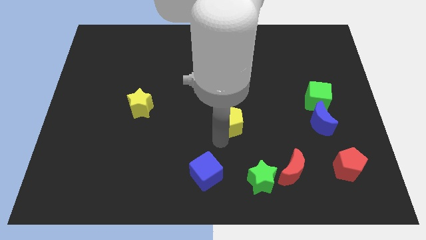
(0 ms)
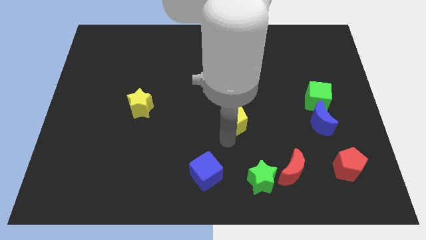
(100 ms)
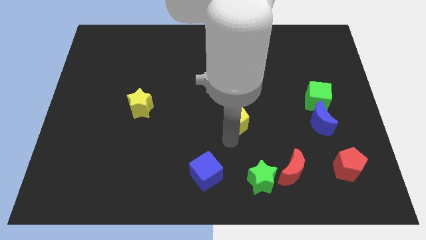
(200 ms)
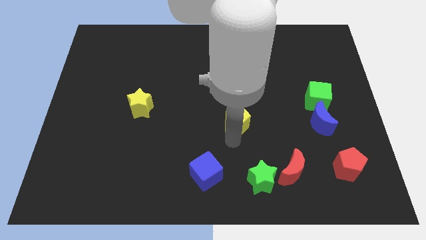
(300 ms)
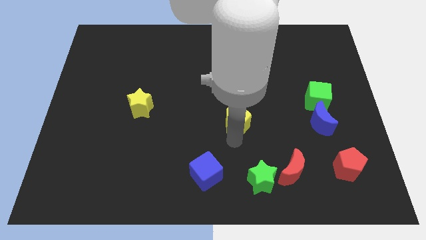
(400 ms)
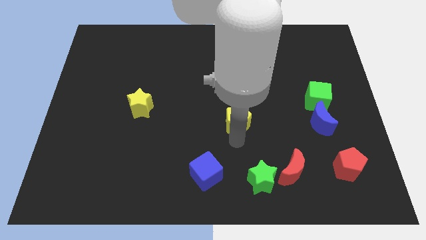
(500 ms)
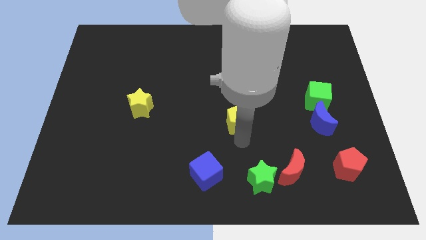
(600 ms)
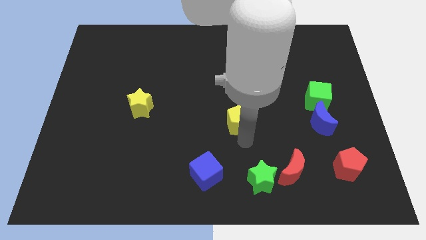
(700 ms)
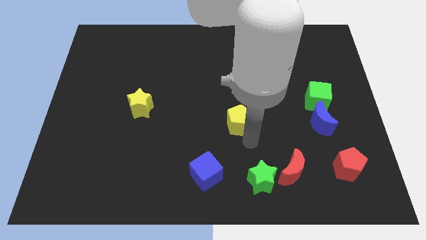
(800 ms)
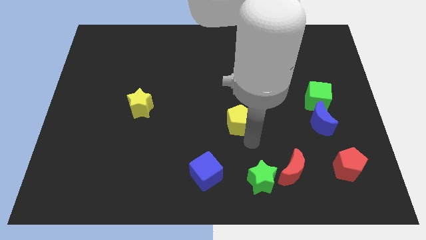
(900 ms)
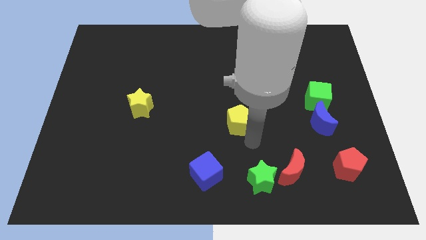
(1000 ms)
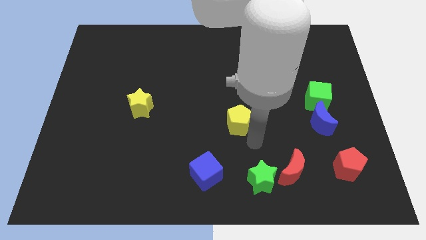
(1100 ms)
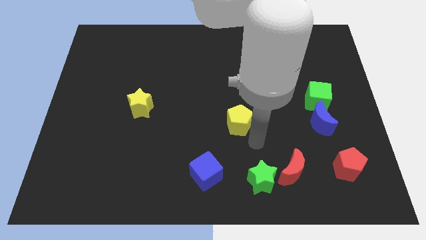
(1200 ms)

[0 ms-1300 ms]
place your arm in between the green star and yellow pentagon

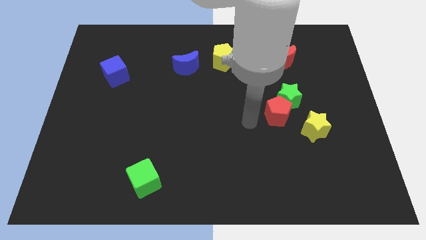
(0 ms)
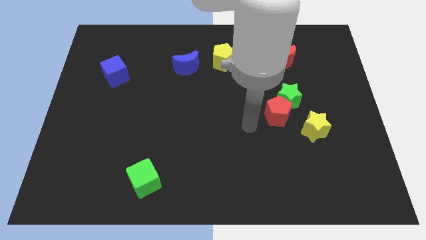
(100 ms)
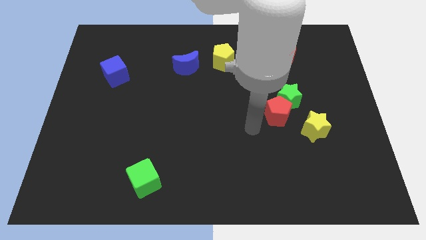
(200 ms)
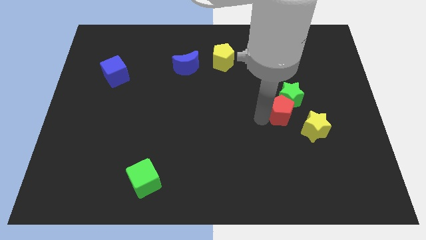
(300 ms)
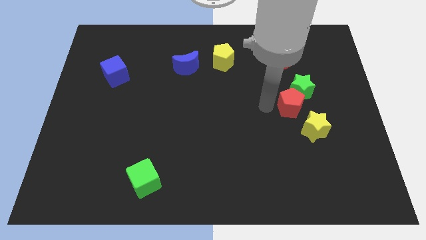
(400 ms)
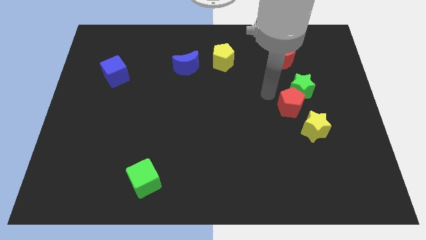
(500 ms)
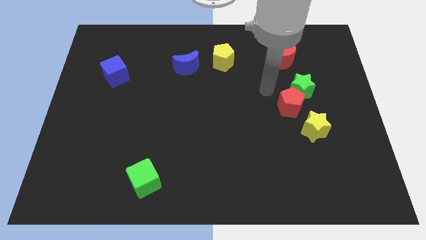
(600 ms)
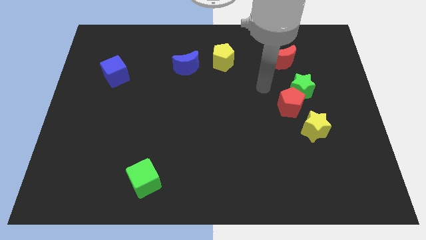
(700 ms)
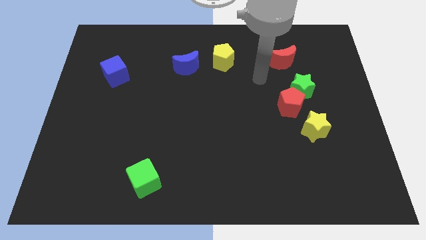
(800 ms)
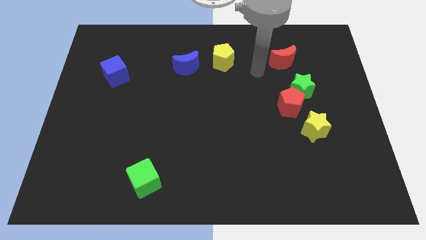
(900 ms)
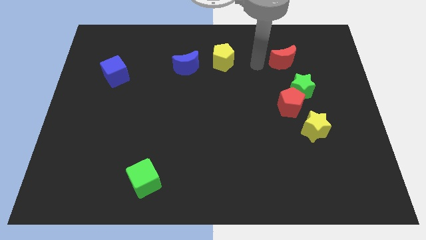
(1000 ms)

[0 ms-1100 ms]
put the green star and red pentagon in between the red crescent and yellow star

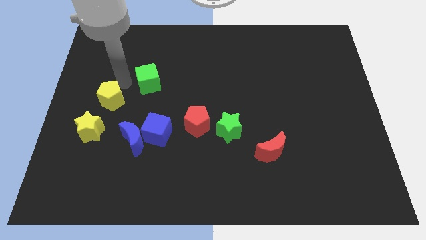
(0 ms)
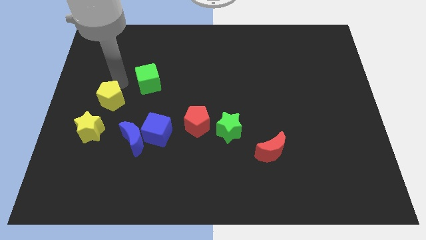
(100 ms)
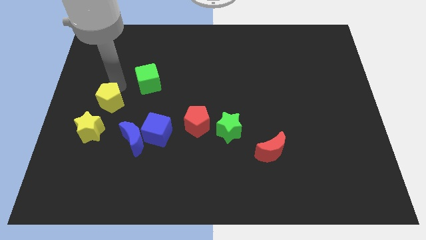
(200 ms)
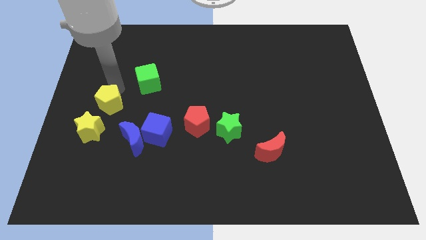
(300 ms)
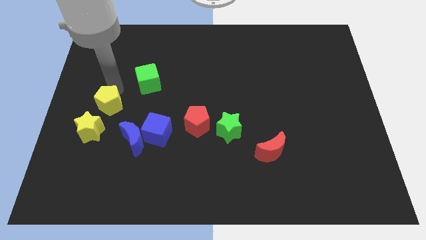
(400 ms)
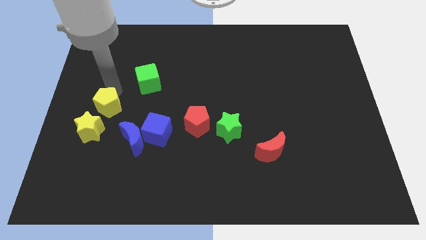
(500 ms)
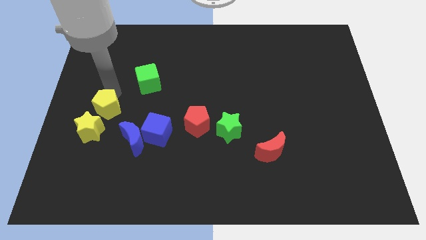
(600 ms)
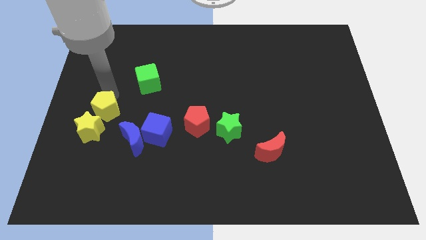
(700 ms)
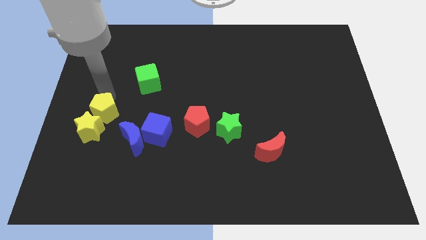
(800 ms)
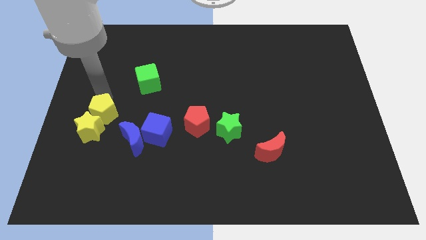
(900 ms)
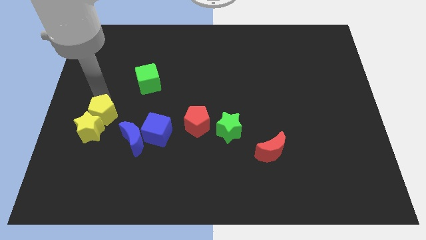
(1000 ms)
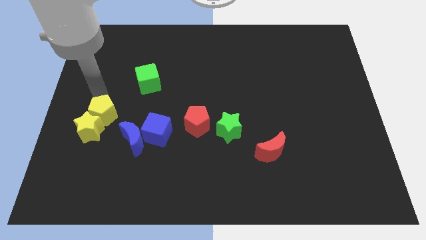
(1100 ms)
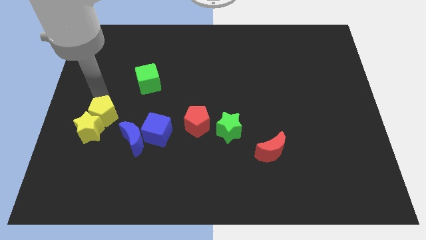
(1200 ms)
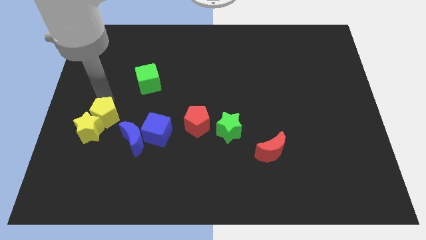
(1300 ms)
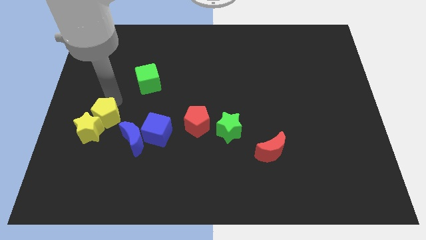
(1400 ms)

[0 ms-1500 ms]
push the yellow pentagon towards the yellow star

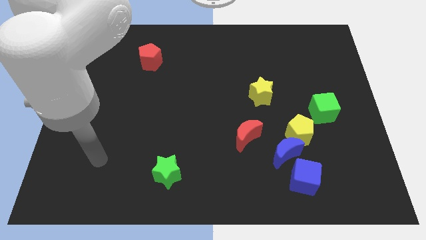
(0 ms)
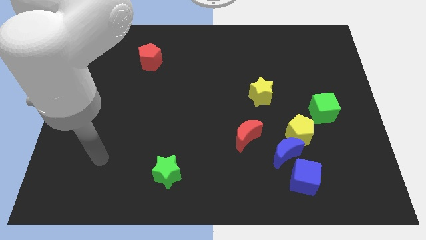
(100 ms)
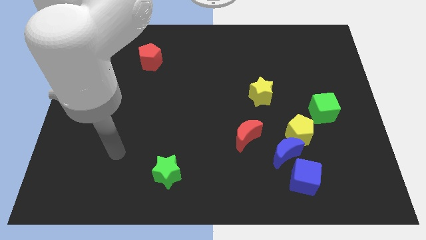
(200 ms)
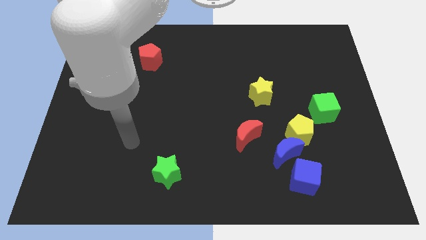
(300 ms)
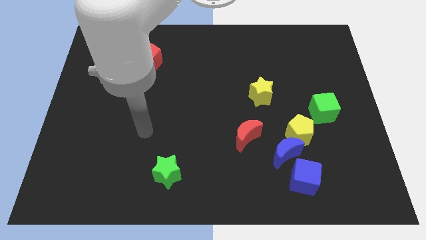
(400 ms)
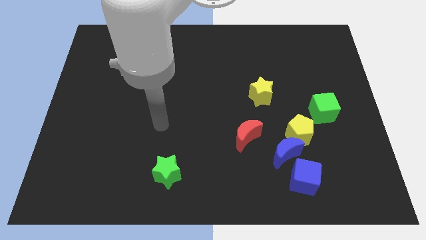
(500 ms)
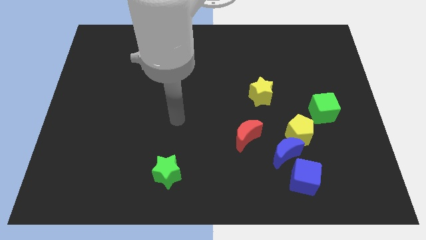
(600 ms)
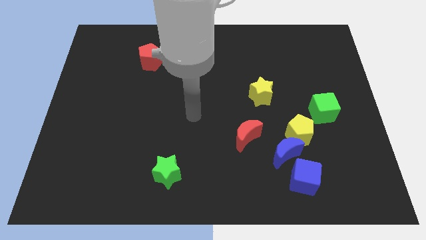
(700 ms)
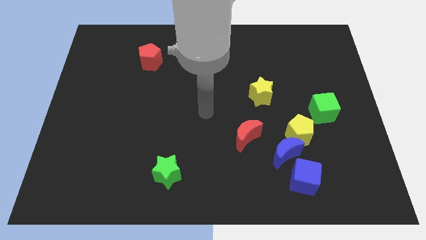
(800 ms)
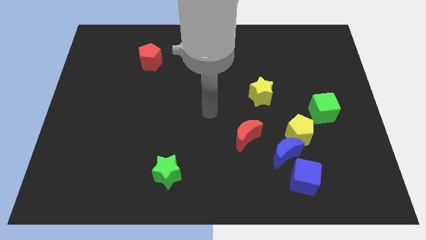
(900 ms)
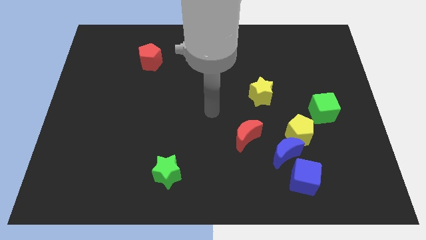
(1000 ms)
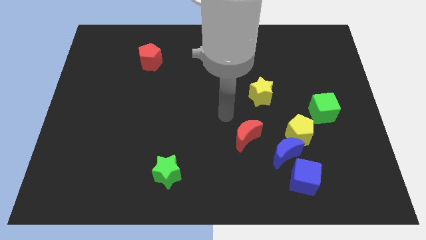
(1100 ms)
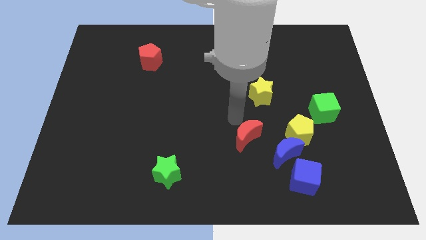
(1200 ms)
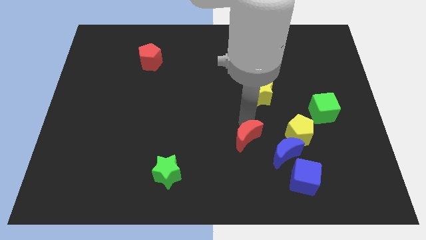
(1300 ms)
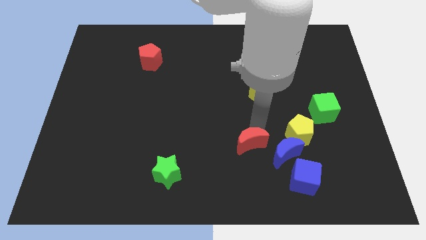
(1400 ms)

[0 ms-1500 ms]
move your arm above the red crescent

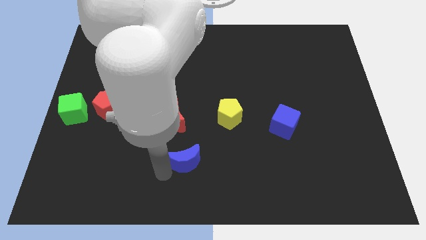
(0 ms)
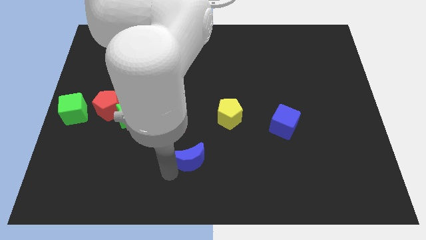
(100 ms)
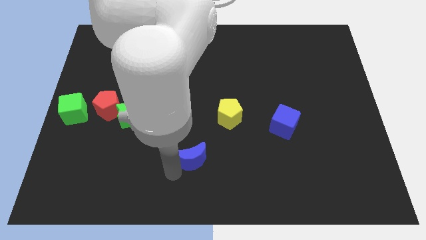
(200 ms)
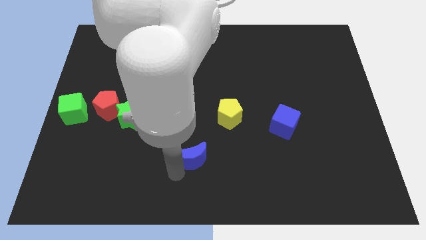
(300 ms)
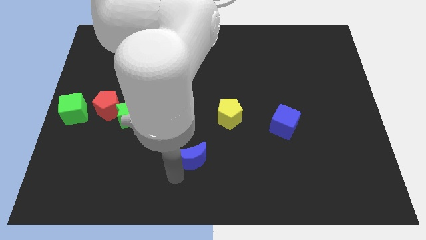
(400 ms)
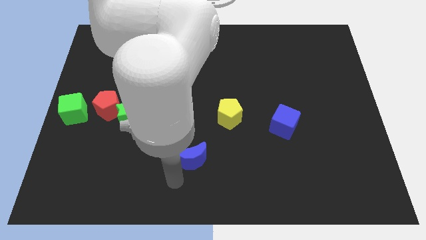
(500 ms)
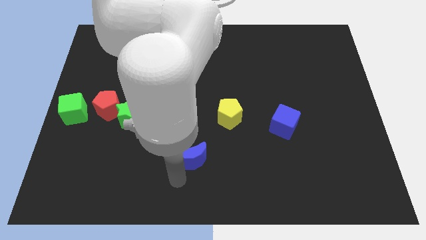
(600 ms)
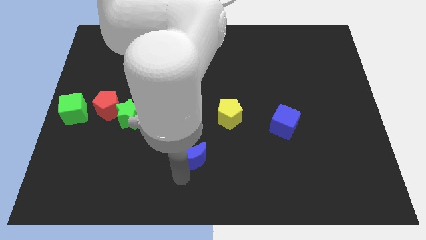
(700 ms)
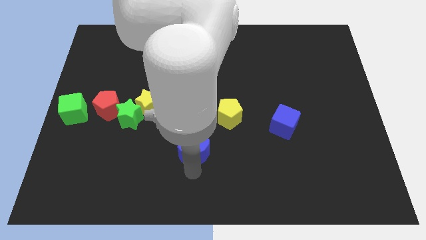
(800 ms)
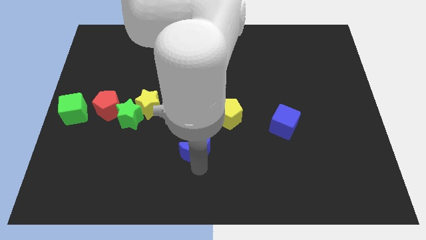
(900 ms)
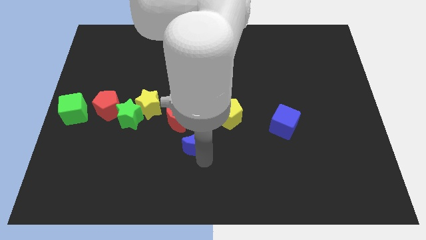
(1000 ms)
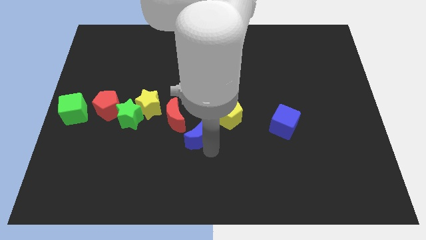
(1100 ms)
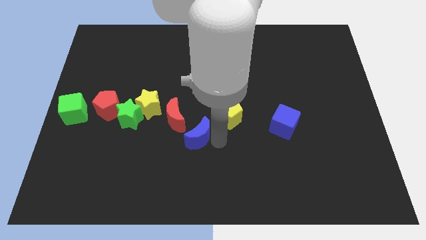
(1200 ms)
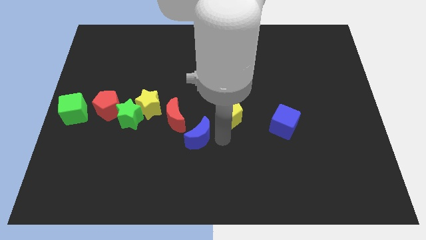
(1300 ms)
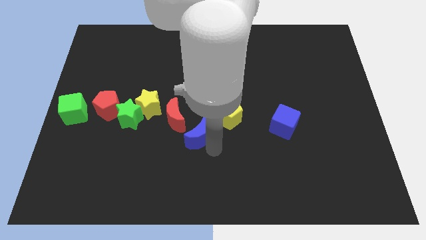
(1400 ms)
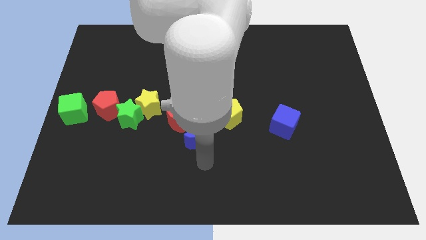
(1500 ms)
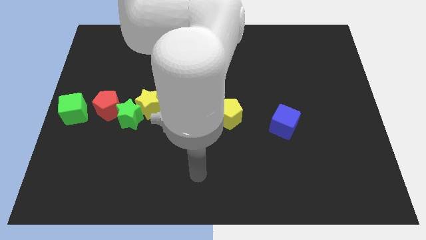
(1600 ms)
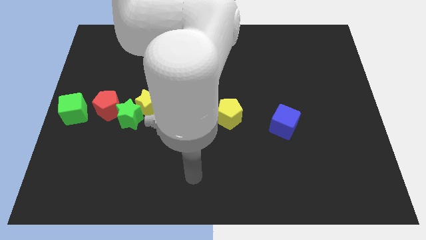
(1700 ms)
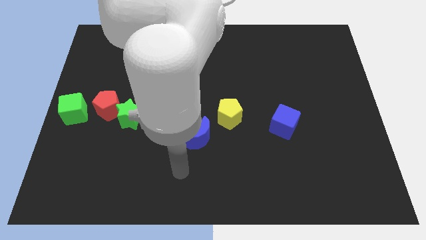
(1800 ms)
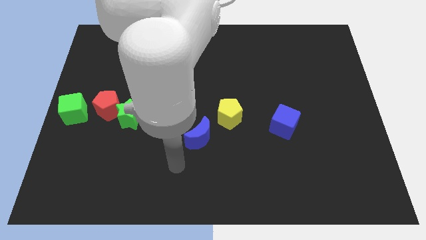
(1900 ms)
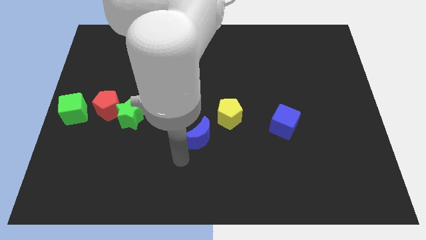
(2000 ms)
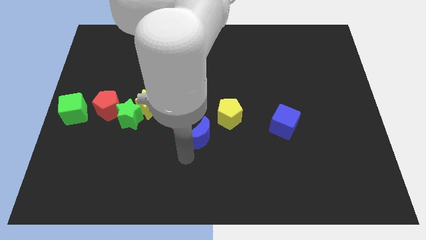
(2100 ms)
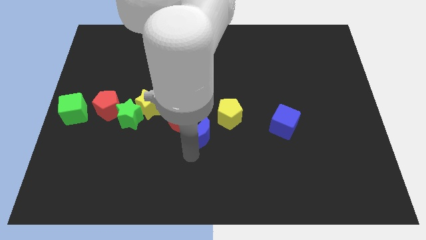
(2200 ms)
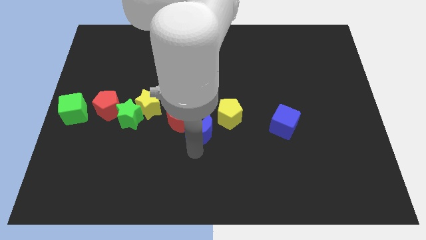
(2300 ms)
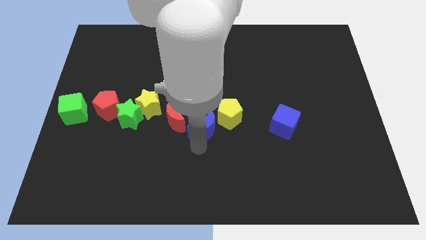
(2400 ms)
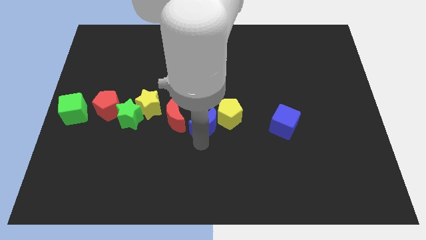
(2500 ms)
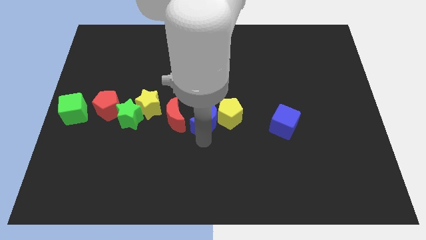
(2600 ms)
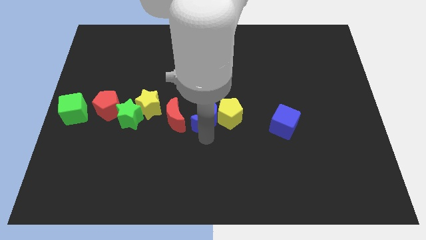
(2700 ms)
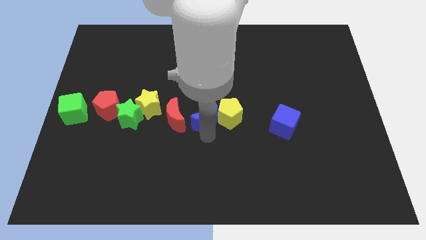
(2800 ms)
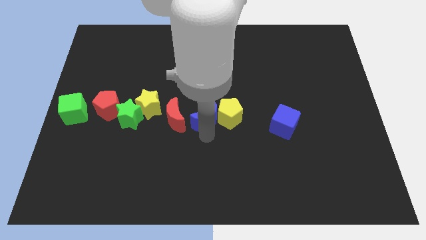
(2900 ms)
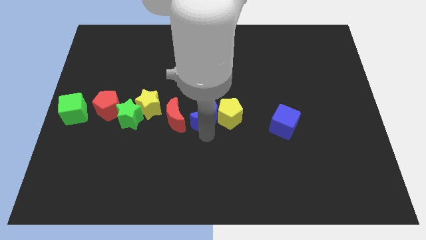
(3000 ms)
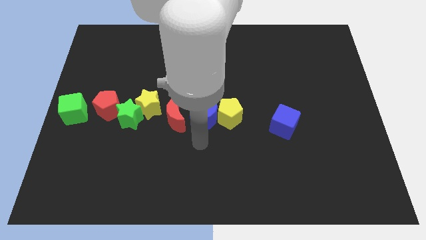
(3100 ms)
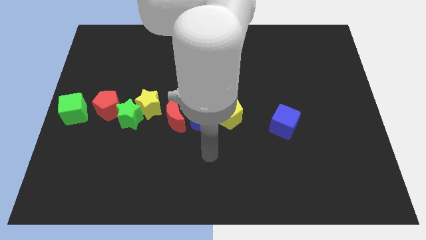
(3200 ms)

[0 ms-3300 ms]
move the blue crescent to the left of the yellow pentagon

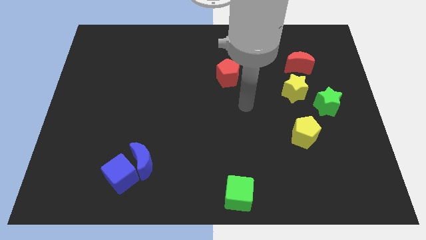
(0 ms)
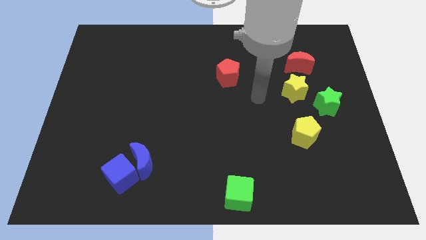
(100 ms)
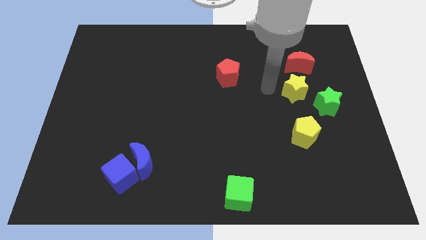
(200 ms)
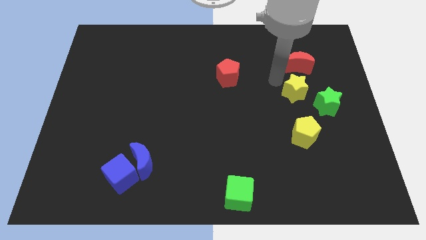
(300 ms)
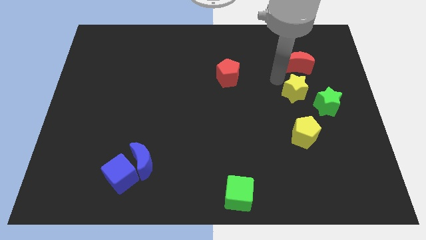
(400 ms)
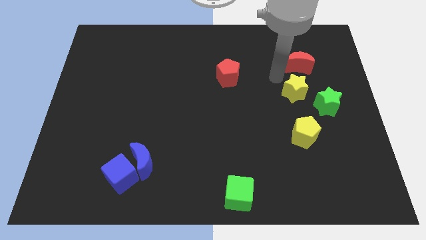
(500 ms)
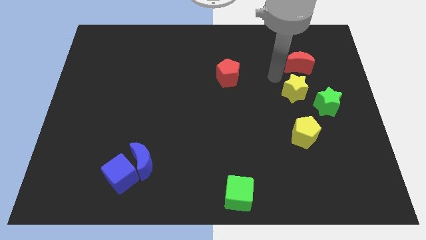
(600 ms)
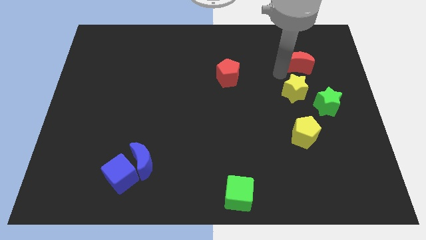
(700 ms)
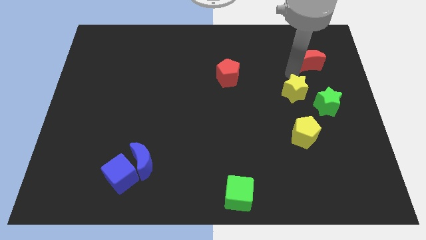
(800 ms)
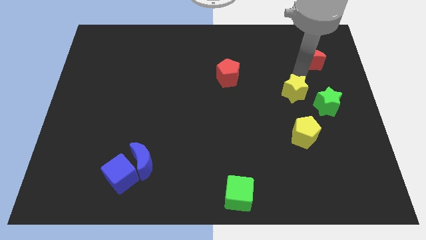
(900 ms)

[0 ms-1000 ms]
point your arm between yellow star and red moon
